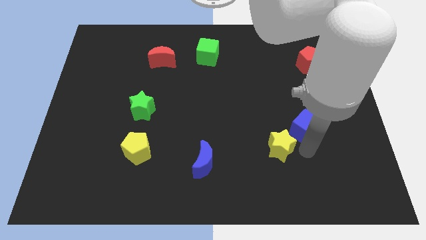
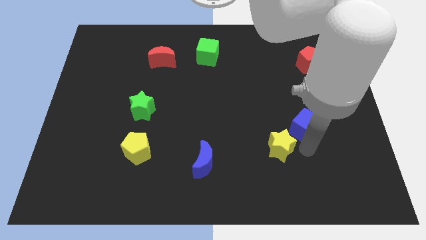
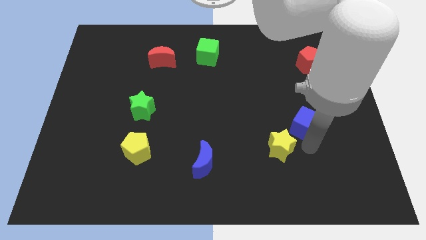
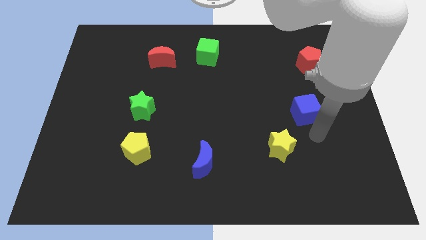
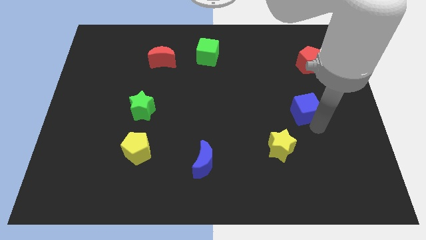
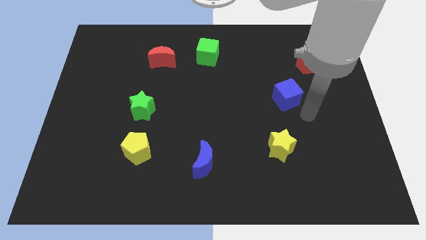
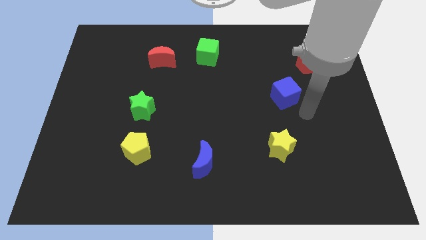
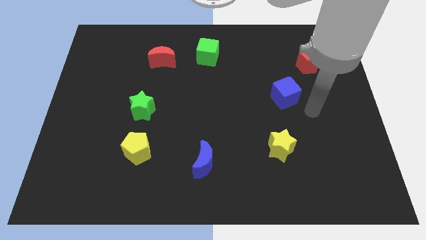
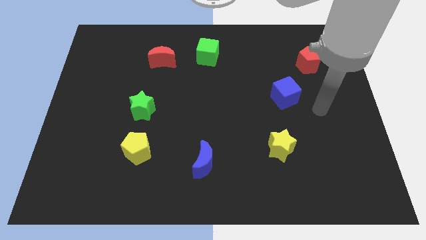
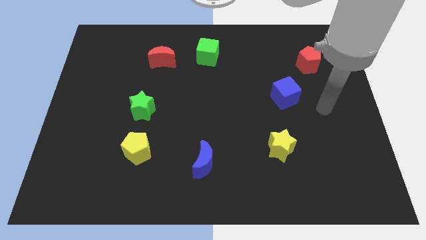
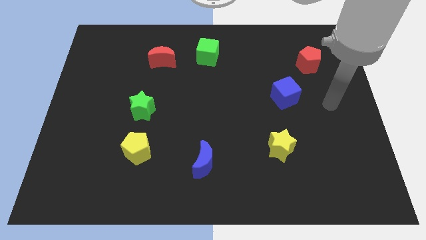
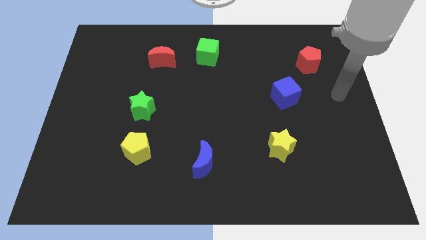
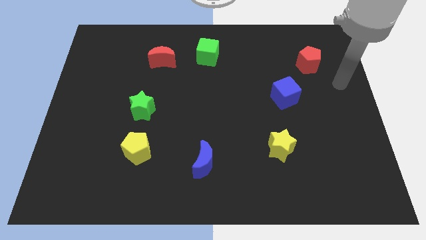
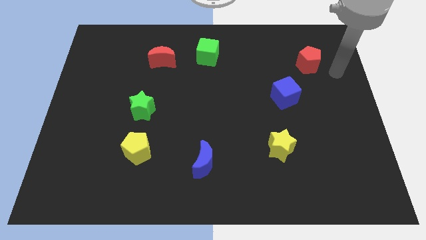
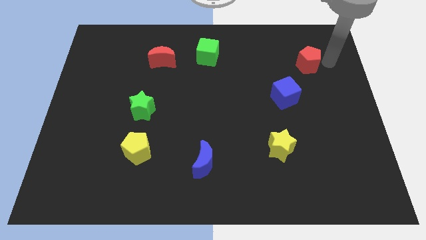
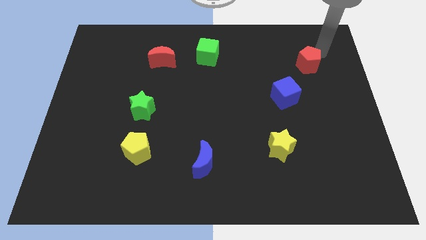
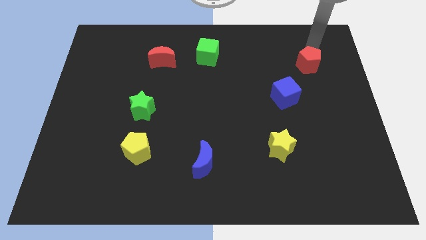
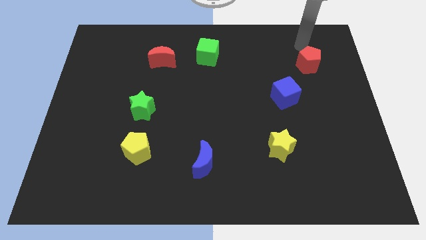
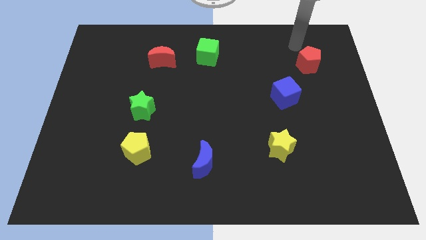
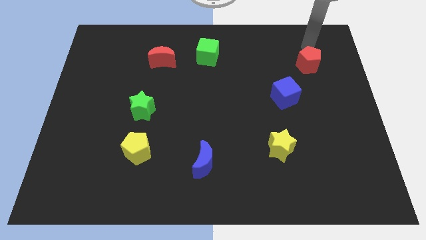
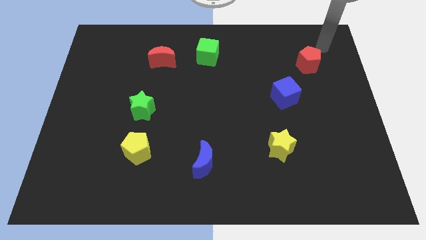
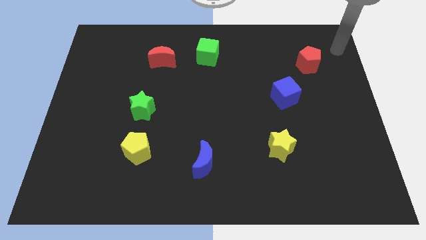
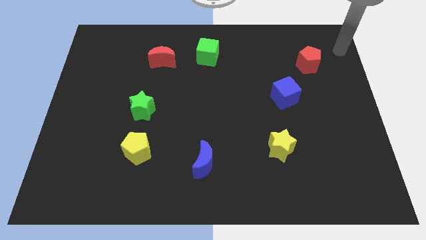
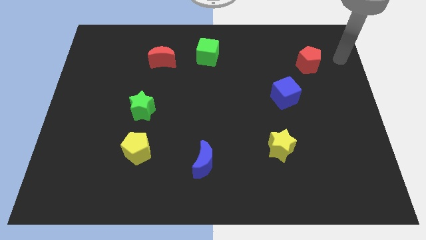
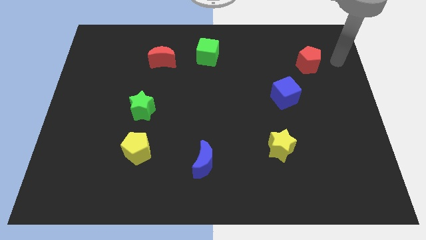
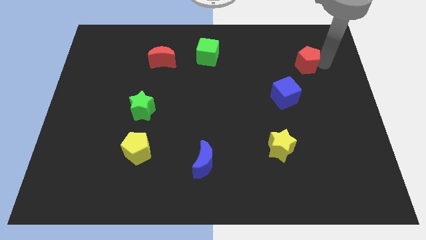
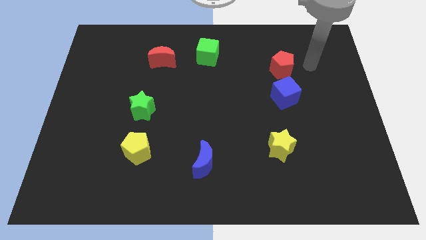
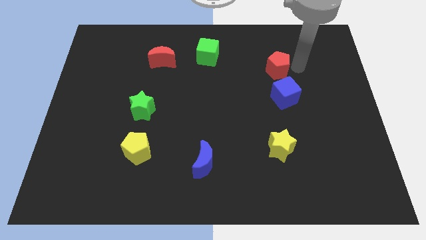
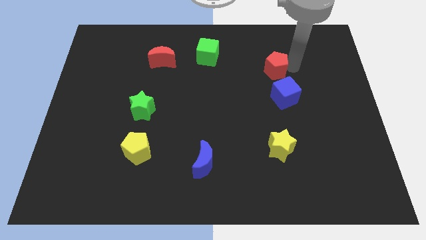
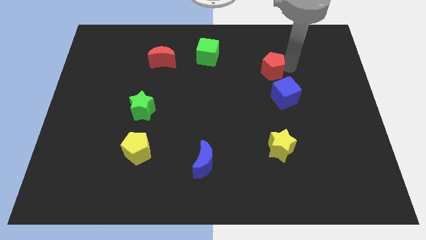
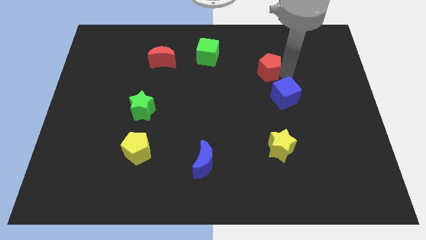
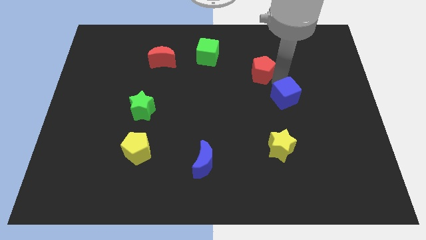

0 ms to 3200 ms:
move the blue cube and red pentagon towards the center of the board

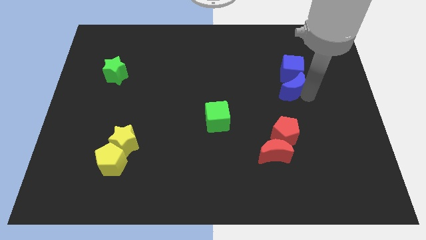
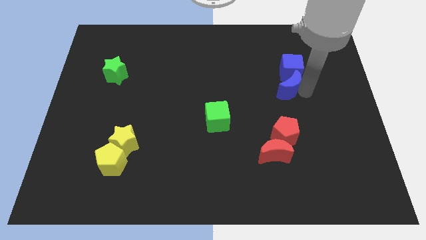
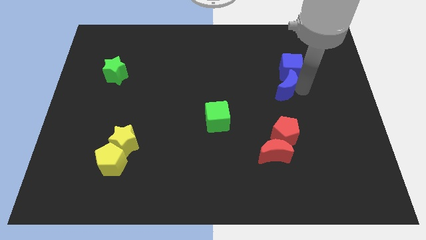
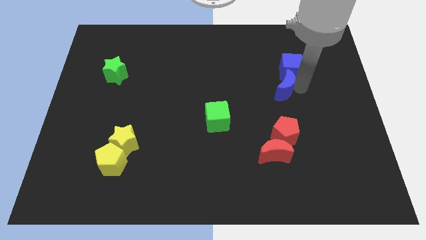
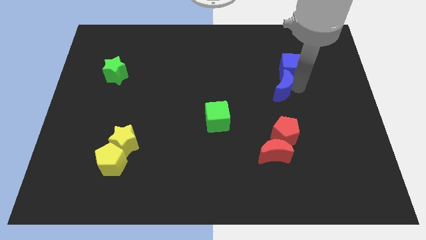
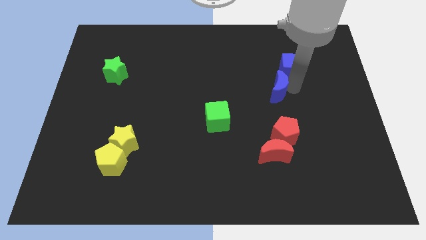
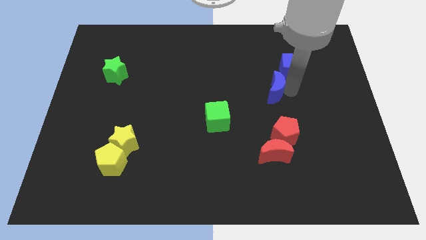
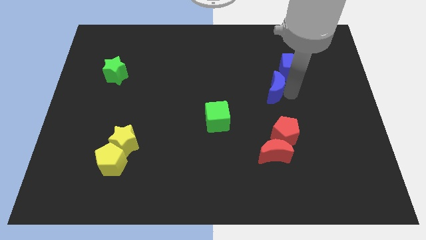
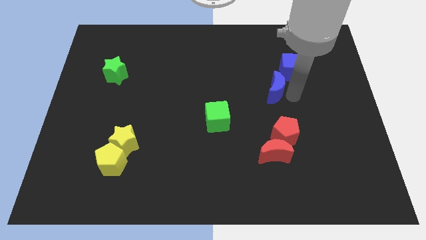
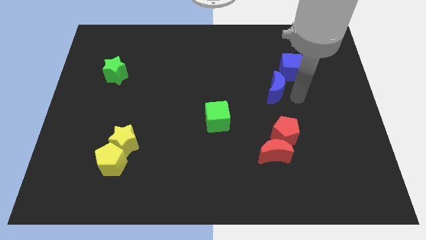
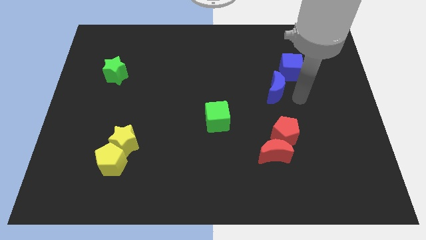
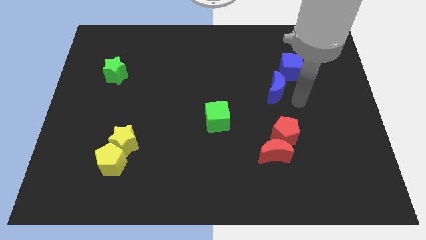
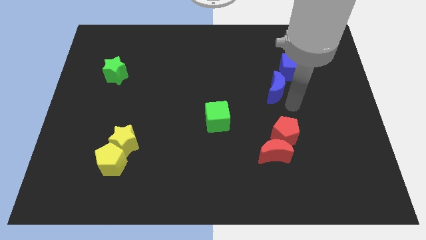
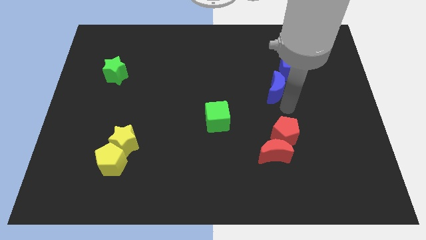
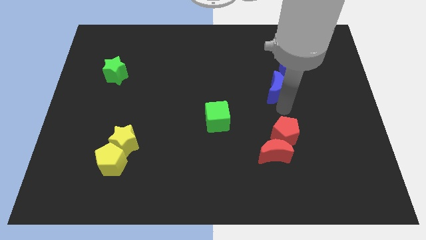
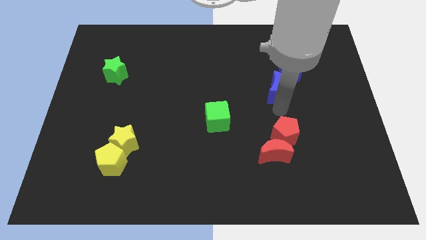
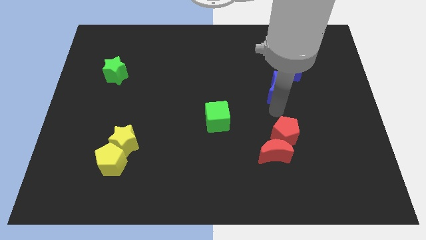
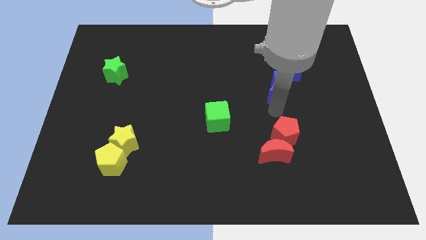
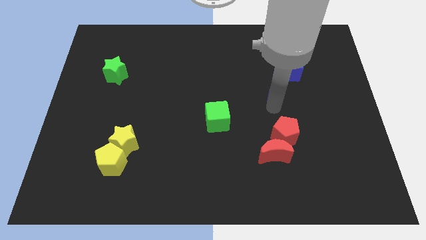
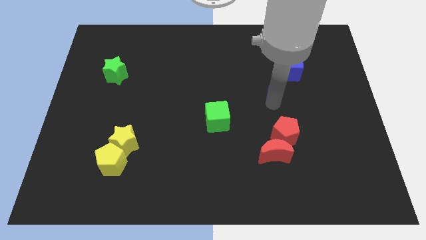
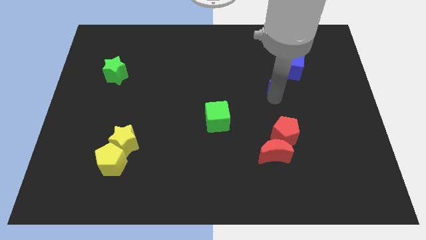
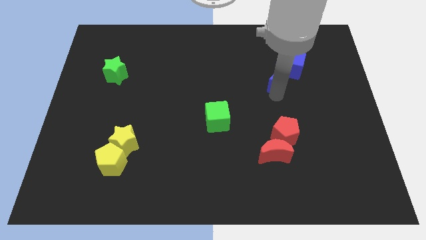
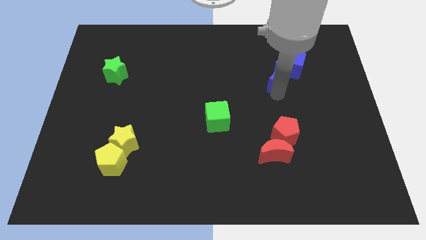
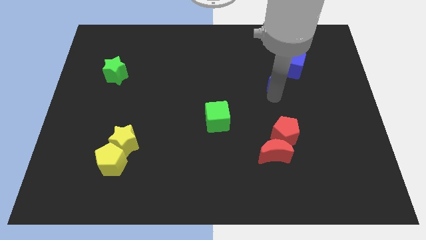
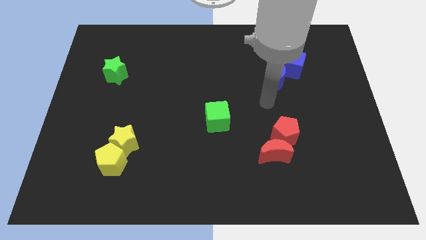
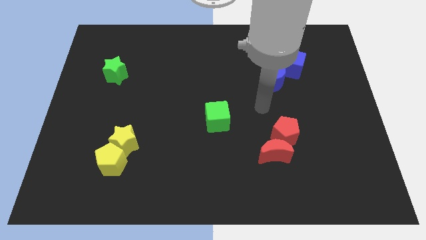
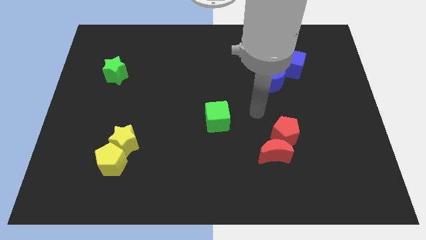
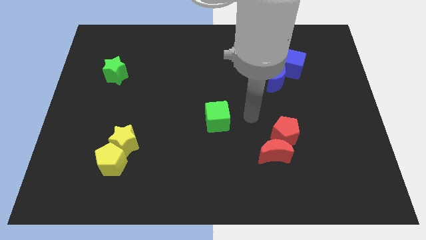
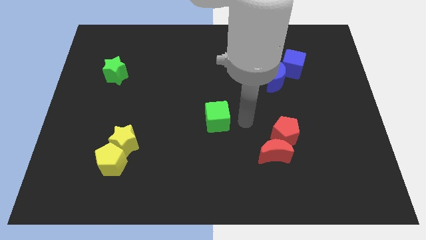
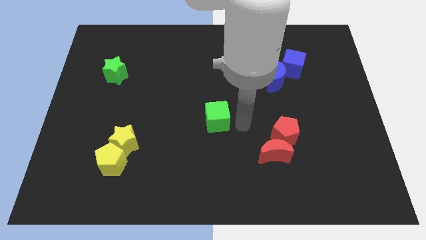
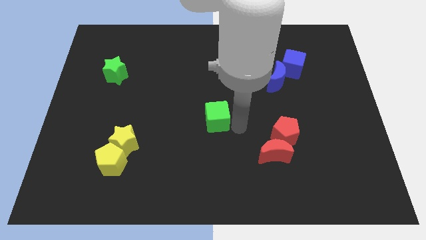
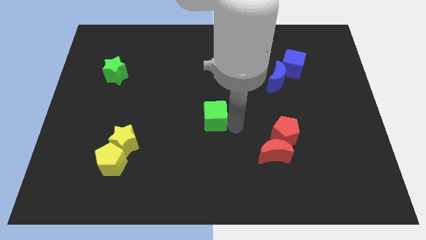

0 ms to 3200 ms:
push the blue crescent into the blue cube

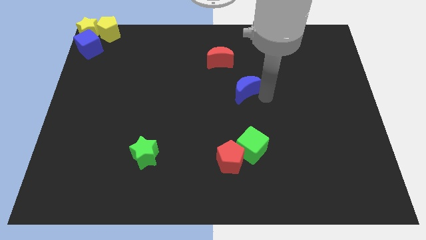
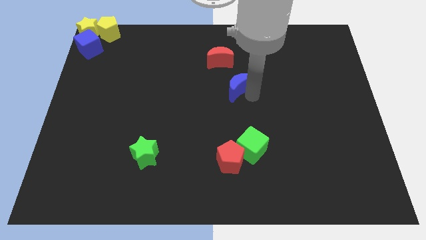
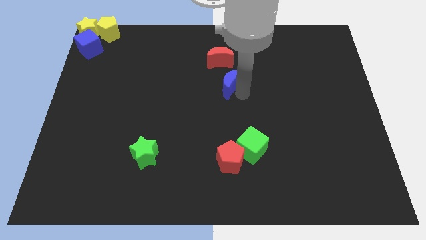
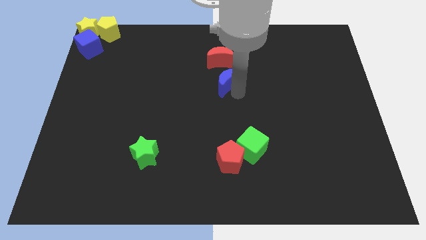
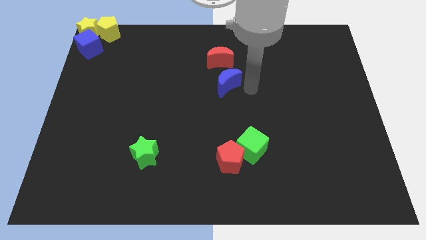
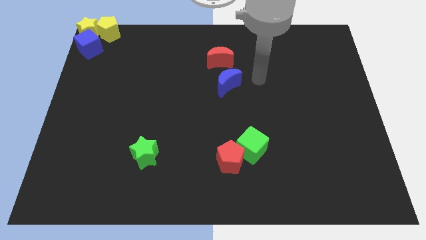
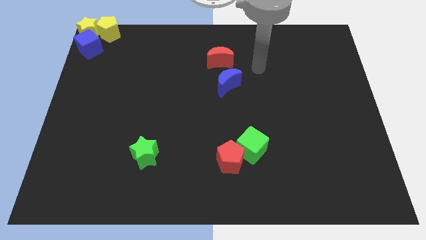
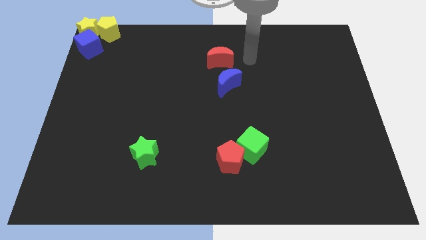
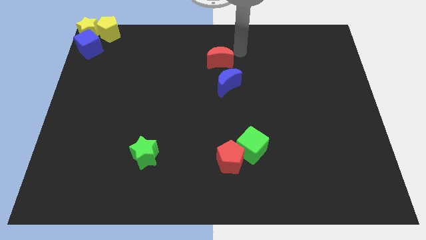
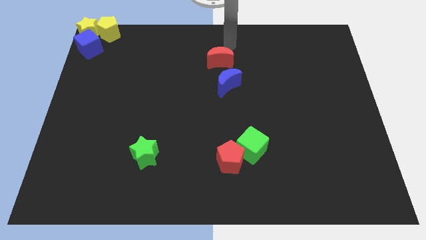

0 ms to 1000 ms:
place the blue moon below the red moon

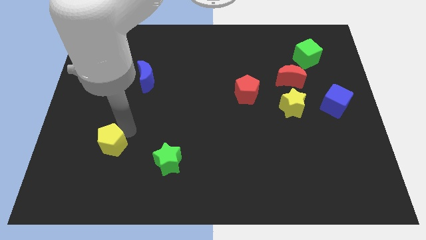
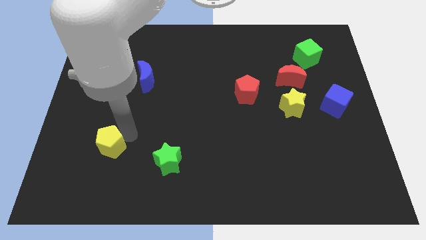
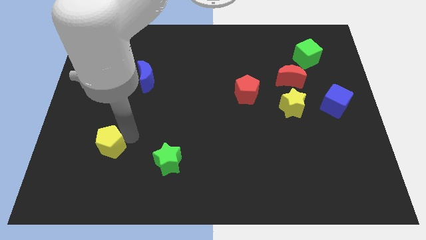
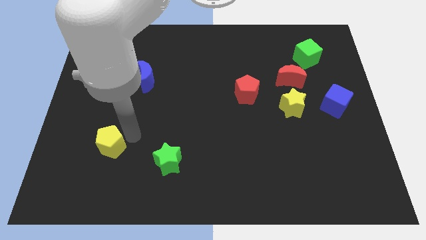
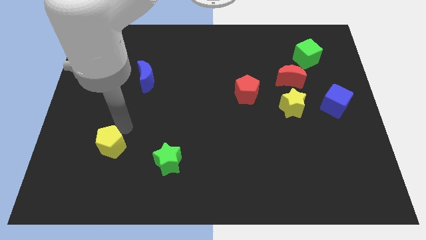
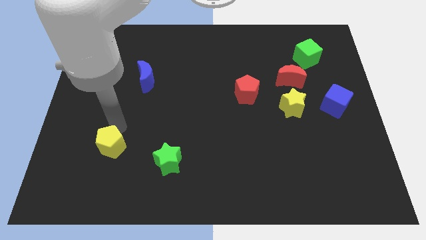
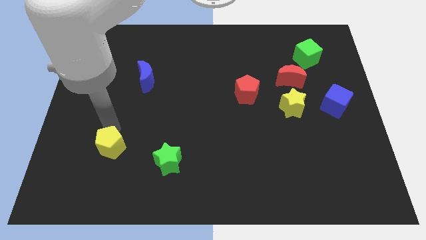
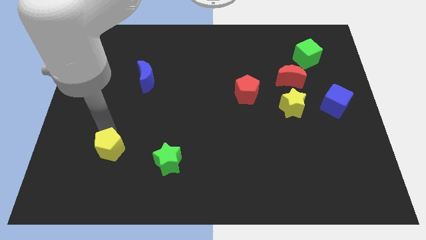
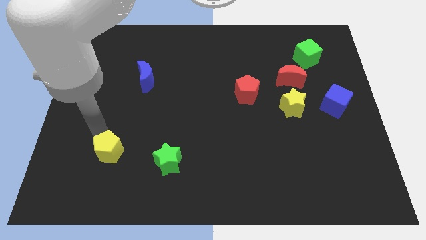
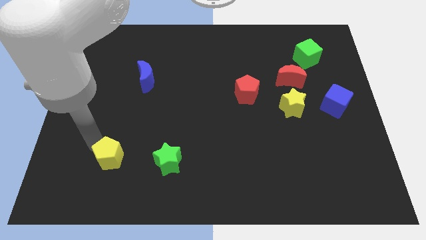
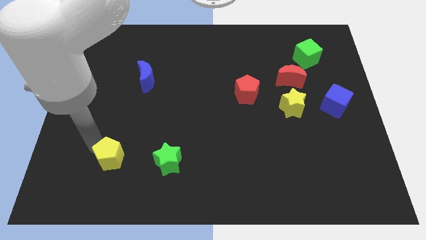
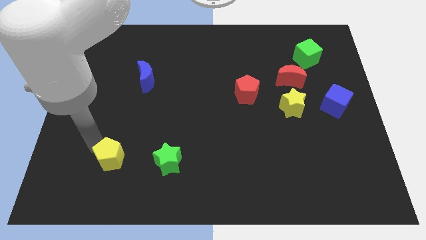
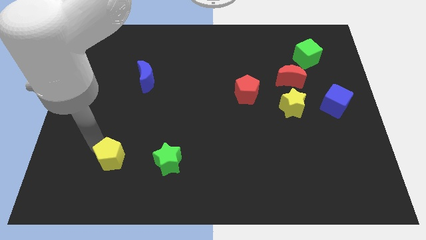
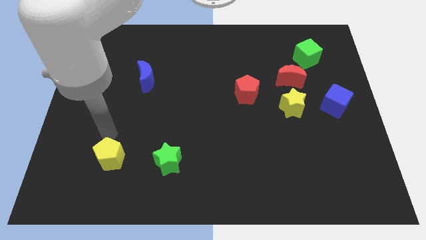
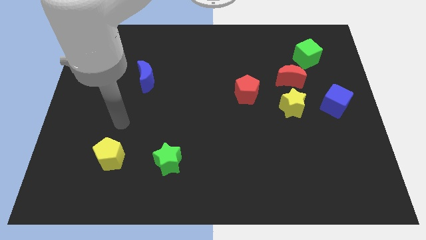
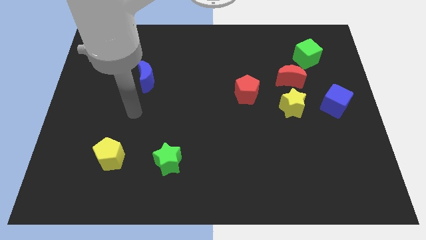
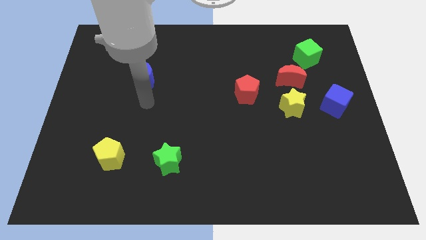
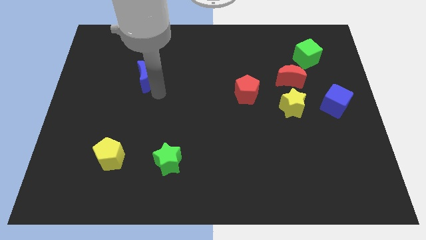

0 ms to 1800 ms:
place the yellow pentagon to the left of the green star
